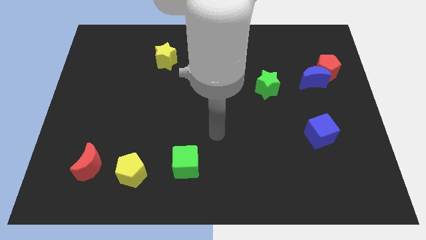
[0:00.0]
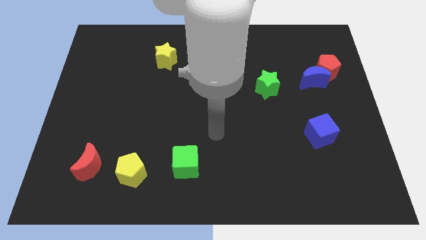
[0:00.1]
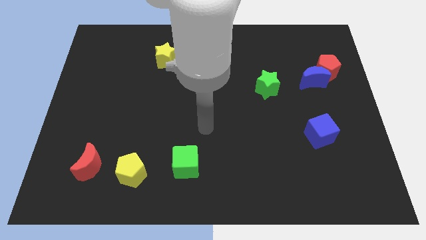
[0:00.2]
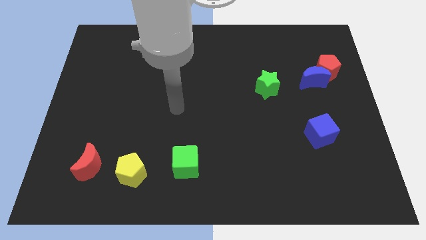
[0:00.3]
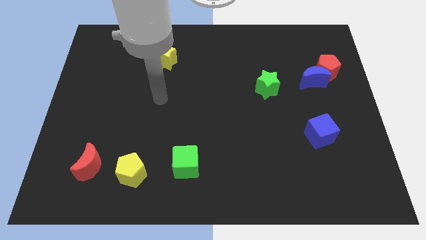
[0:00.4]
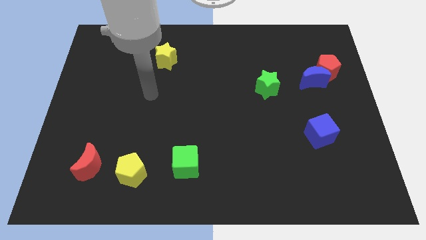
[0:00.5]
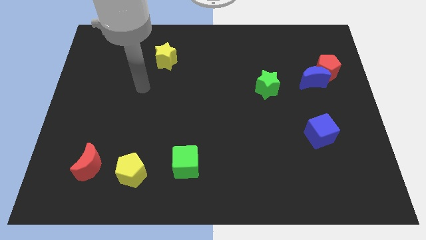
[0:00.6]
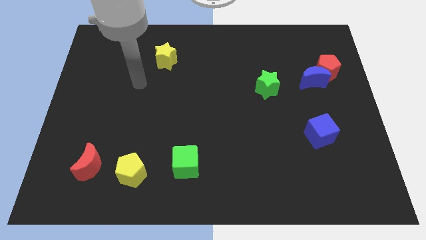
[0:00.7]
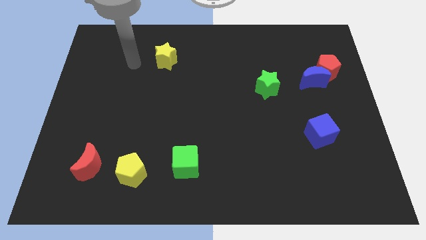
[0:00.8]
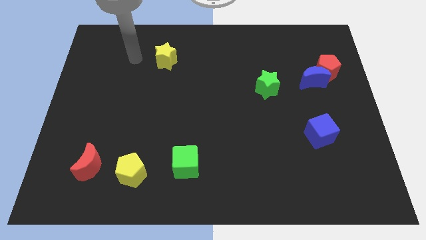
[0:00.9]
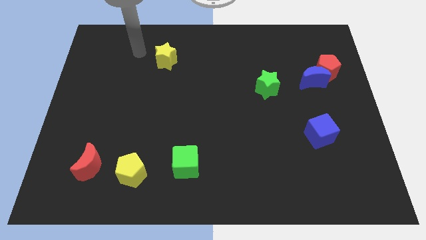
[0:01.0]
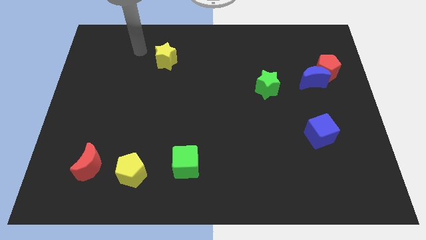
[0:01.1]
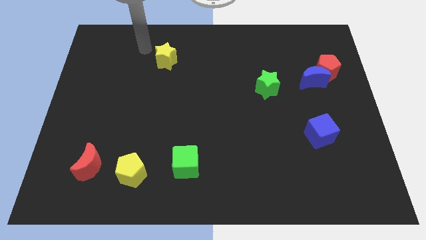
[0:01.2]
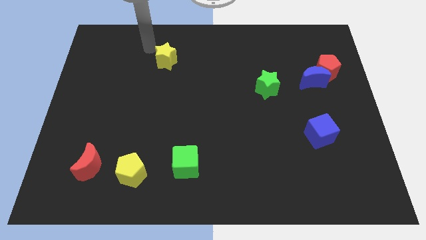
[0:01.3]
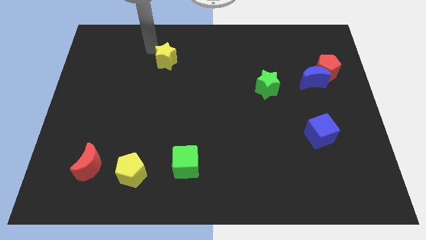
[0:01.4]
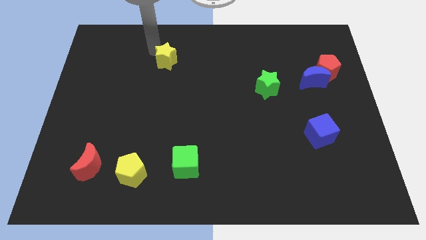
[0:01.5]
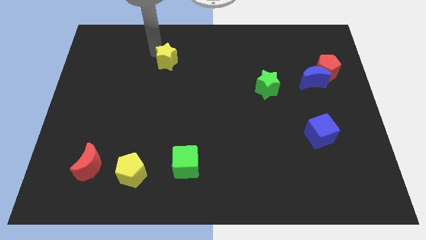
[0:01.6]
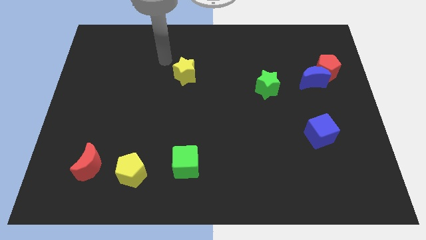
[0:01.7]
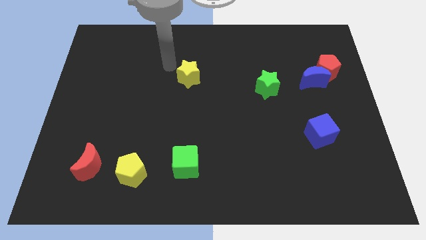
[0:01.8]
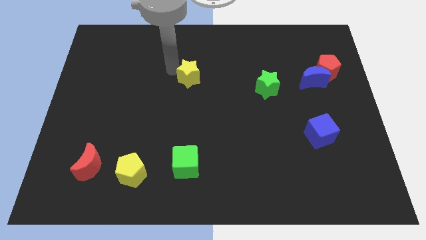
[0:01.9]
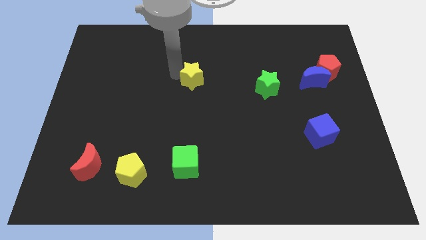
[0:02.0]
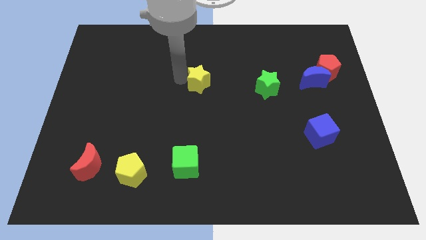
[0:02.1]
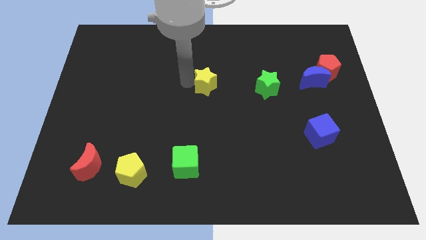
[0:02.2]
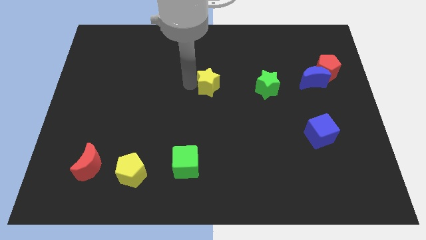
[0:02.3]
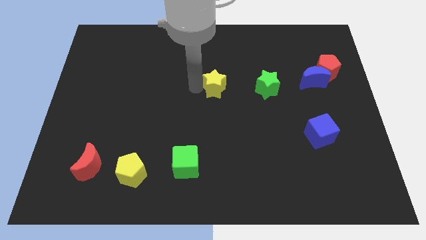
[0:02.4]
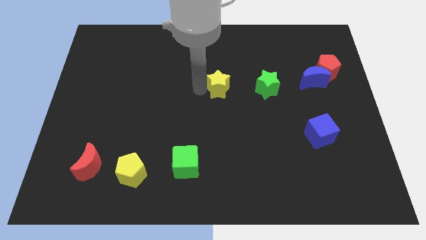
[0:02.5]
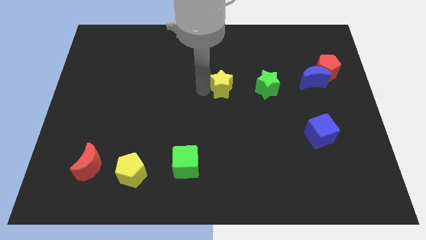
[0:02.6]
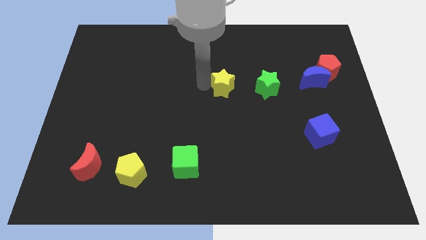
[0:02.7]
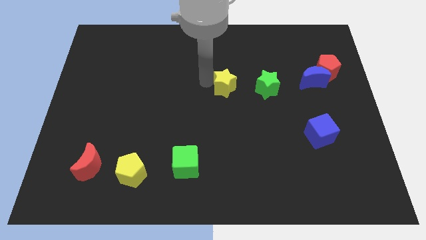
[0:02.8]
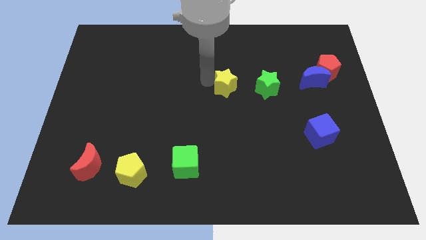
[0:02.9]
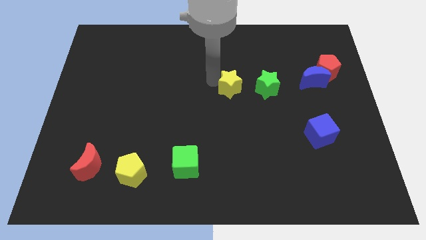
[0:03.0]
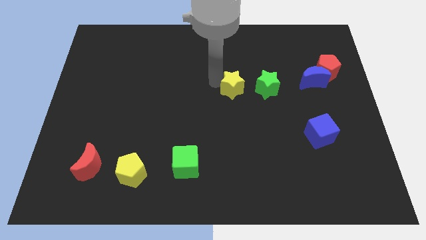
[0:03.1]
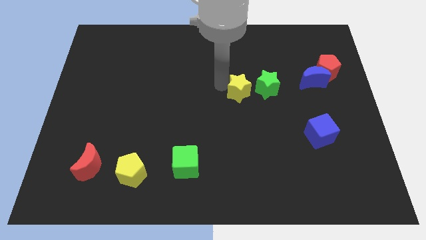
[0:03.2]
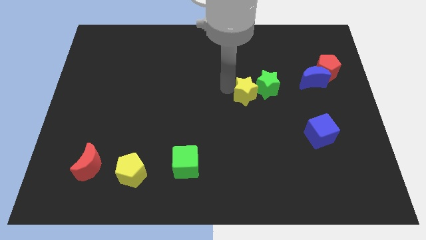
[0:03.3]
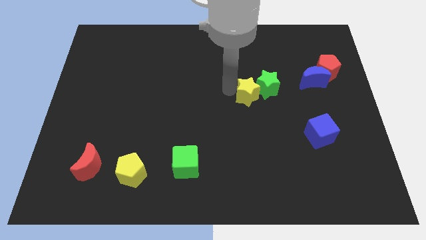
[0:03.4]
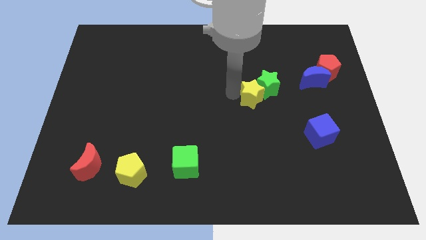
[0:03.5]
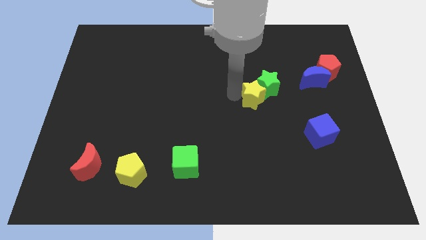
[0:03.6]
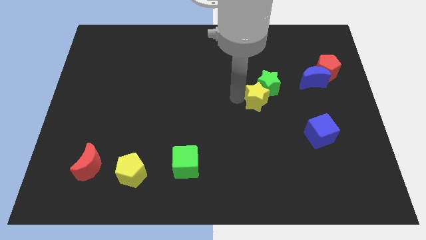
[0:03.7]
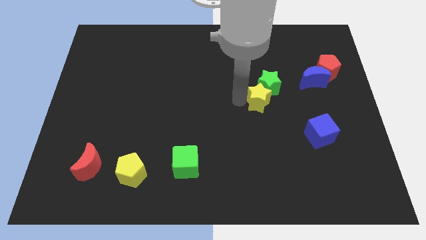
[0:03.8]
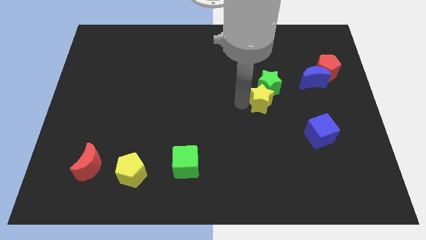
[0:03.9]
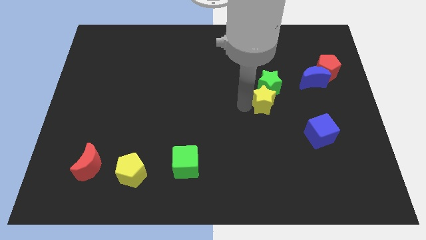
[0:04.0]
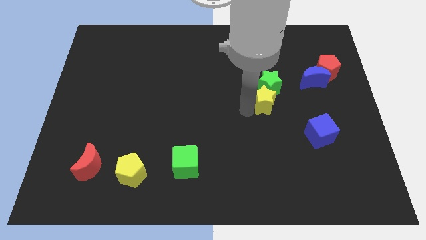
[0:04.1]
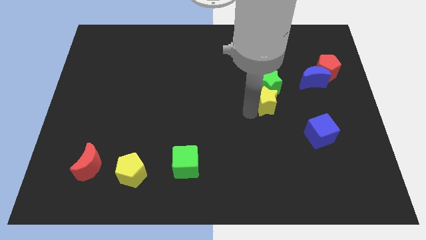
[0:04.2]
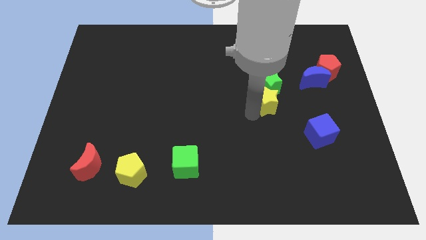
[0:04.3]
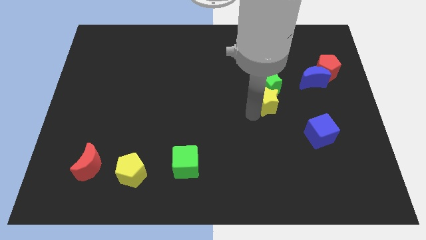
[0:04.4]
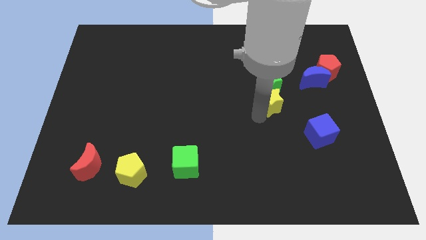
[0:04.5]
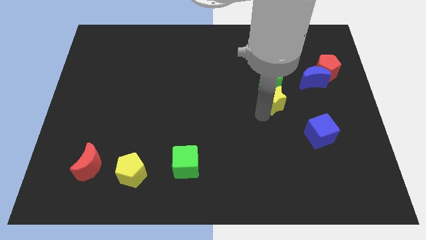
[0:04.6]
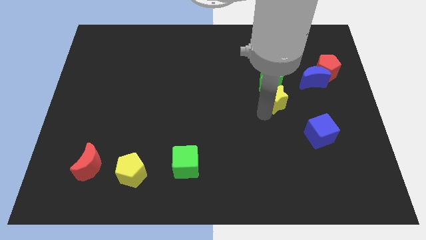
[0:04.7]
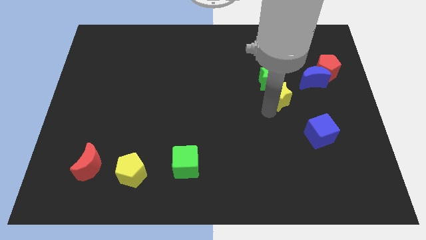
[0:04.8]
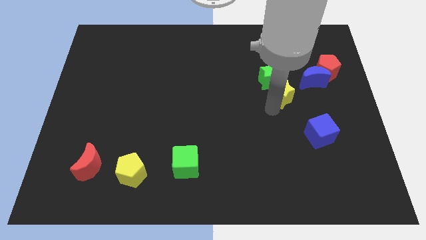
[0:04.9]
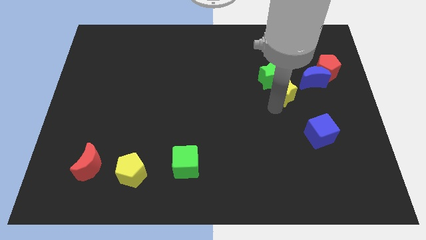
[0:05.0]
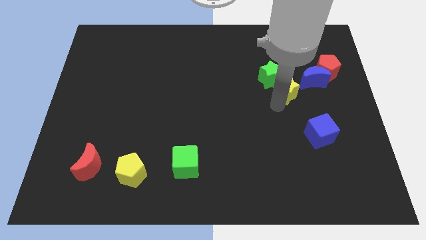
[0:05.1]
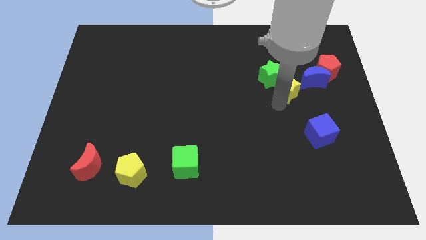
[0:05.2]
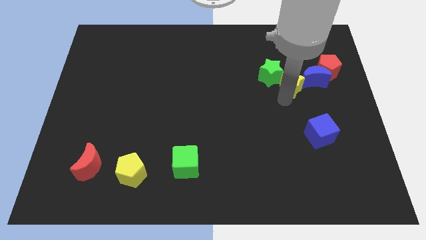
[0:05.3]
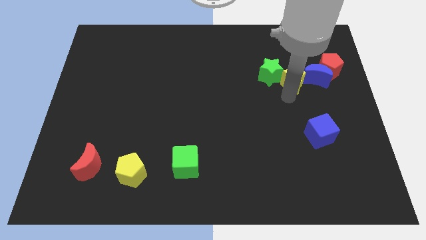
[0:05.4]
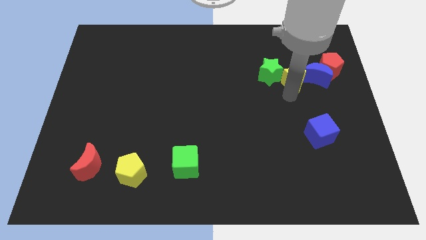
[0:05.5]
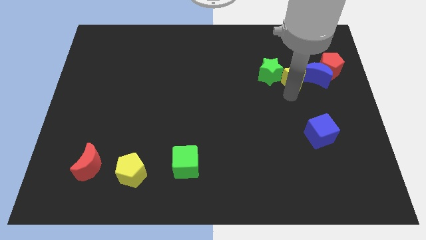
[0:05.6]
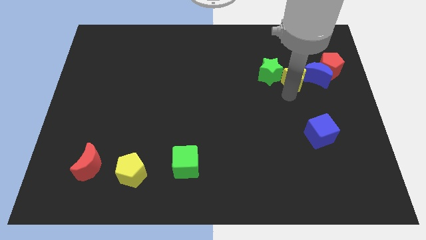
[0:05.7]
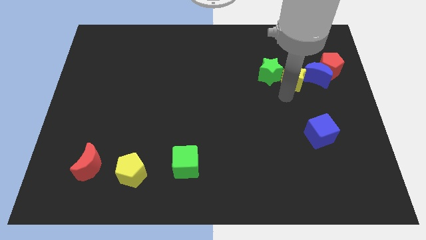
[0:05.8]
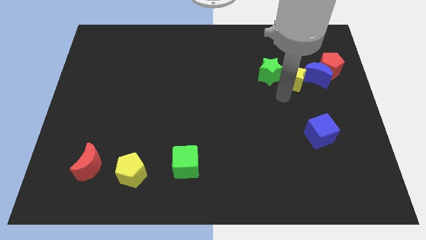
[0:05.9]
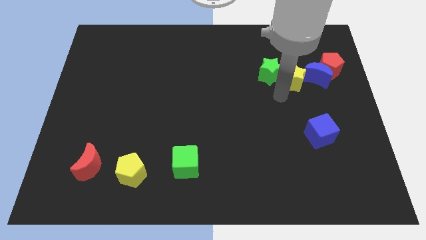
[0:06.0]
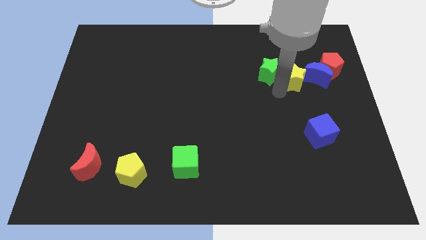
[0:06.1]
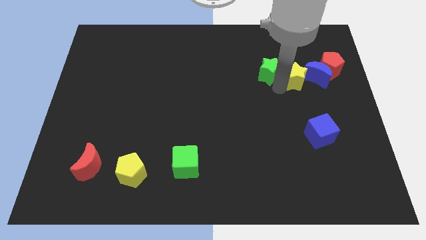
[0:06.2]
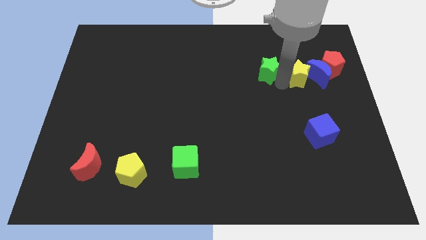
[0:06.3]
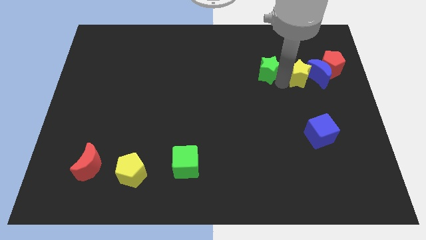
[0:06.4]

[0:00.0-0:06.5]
put the yellow star close to the blue moon

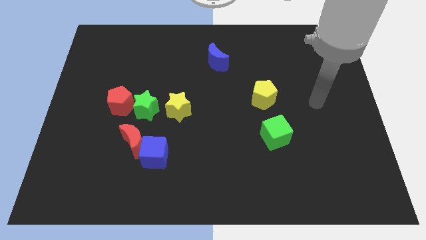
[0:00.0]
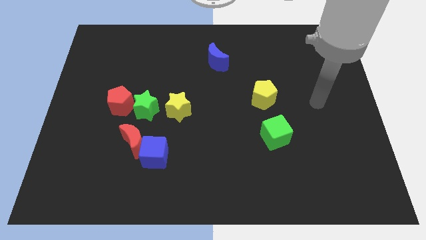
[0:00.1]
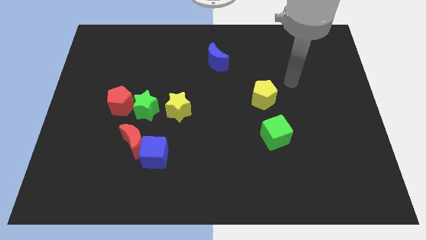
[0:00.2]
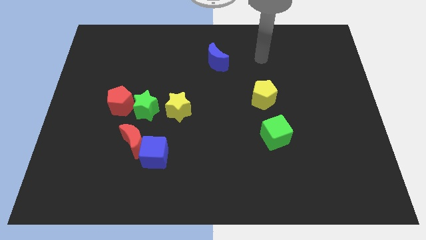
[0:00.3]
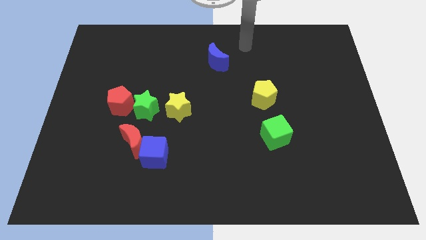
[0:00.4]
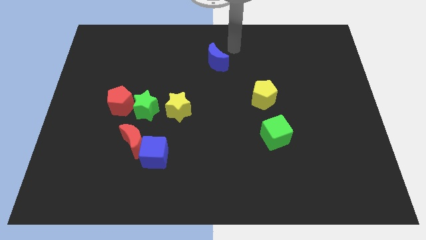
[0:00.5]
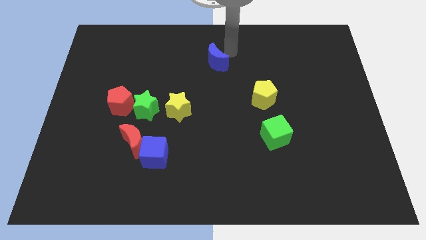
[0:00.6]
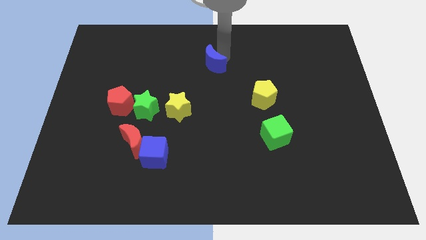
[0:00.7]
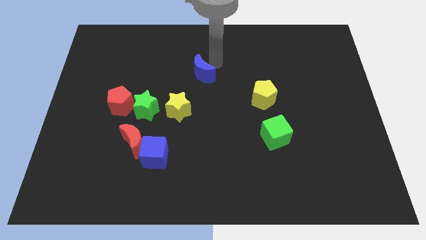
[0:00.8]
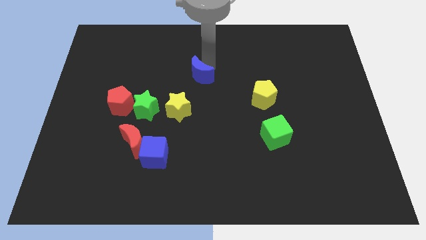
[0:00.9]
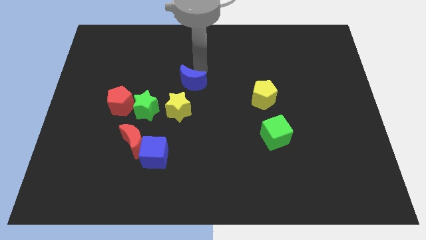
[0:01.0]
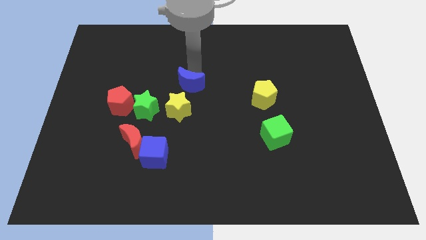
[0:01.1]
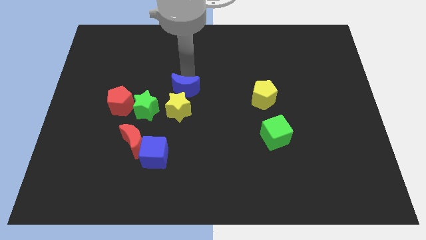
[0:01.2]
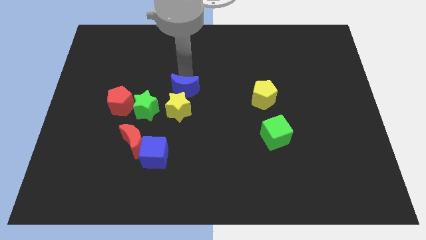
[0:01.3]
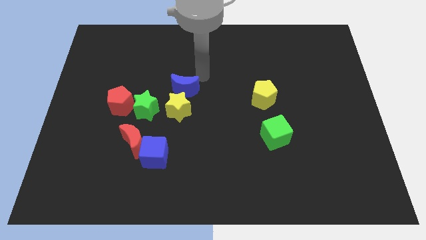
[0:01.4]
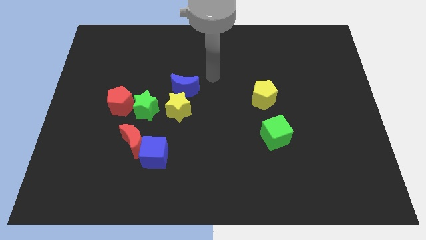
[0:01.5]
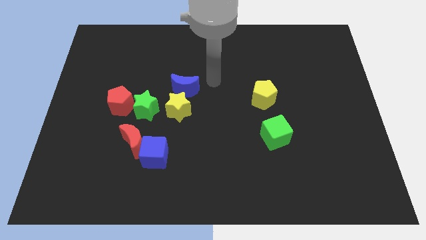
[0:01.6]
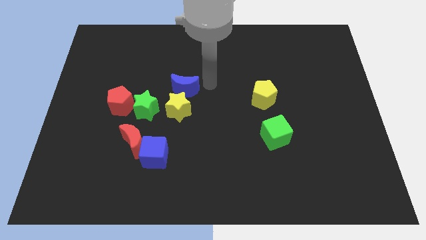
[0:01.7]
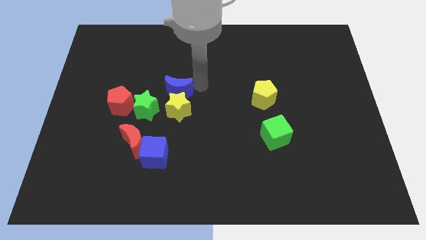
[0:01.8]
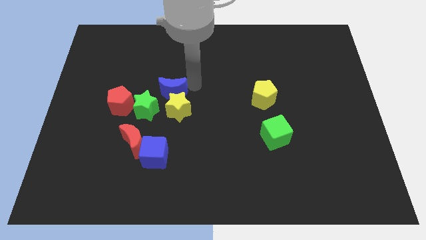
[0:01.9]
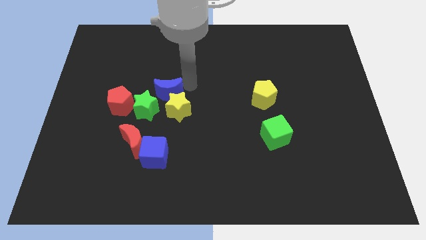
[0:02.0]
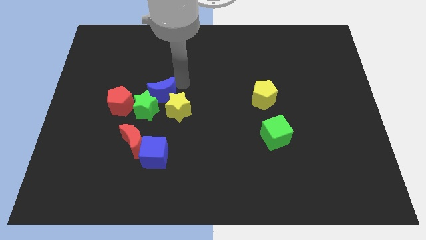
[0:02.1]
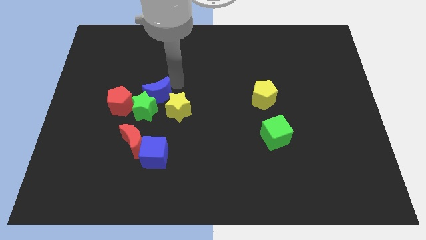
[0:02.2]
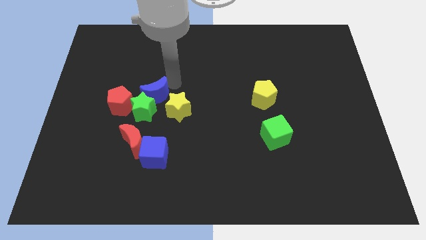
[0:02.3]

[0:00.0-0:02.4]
slide the blue moon to the green star
